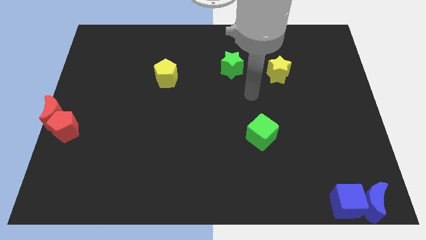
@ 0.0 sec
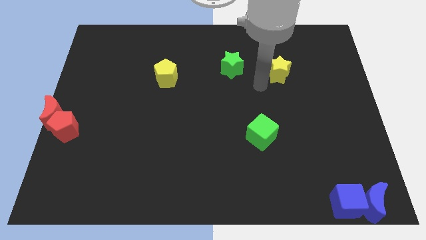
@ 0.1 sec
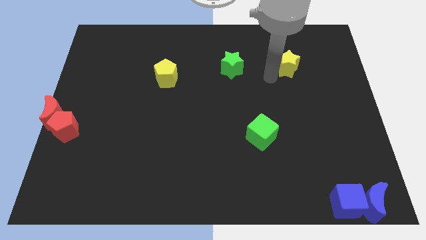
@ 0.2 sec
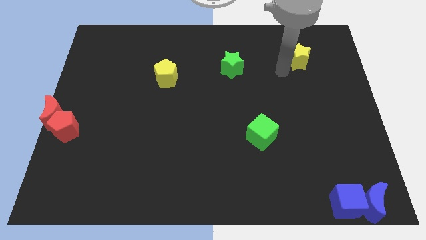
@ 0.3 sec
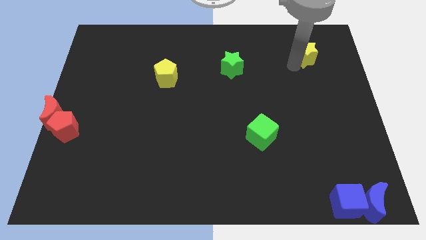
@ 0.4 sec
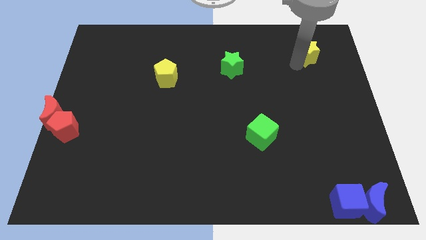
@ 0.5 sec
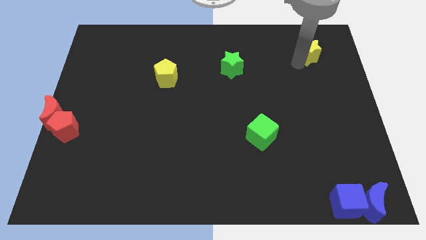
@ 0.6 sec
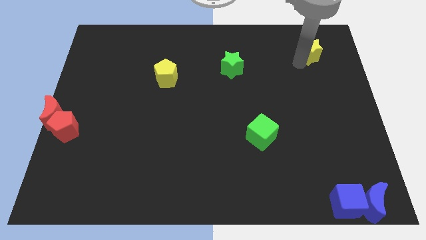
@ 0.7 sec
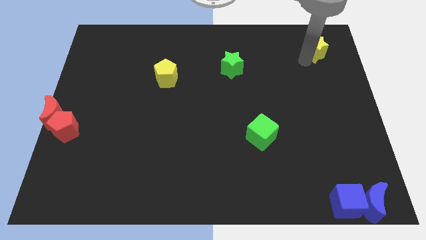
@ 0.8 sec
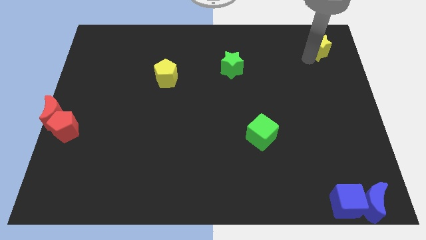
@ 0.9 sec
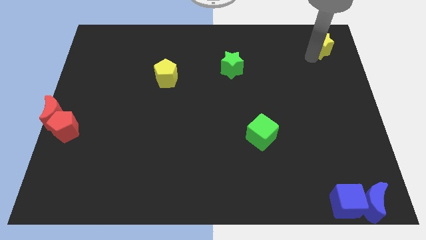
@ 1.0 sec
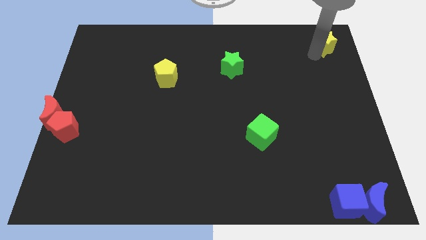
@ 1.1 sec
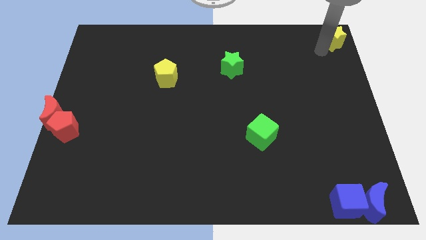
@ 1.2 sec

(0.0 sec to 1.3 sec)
push the yellow star to the top right corner

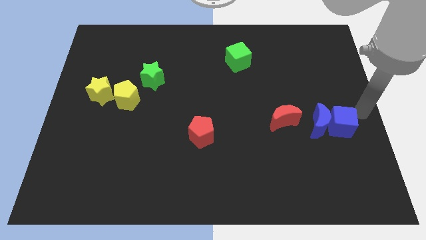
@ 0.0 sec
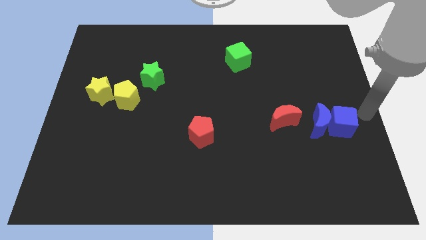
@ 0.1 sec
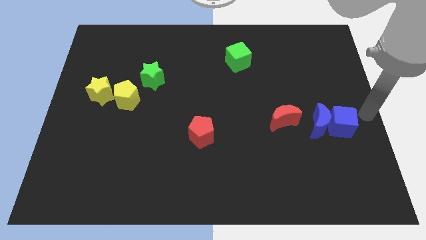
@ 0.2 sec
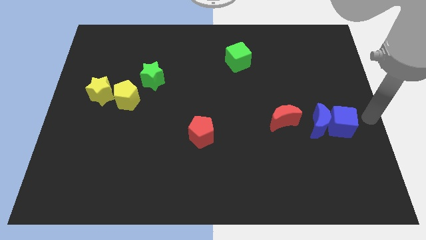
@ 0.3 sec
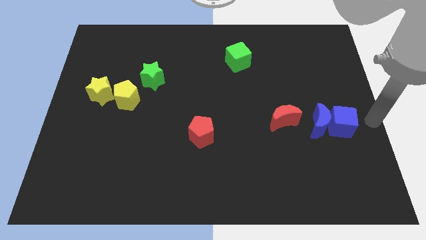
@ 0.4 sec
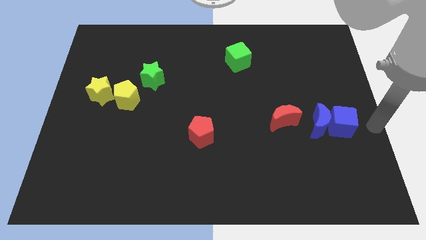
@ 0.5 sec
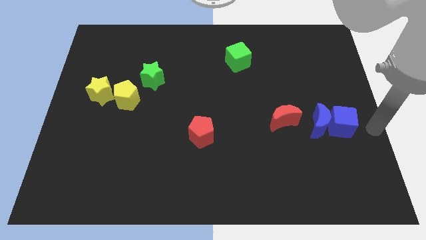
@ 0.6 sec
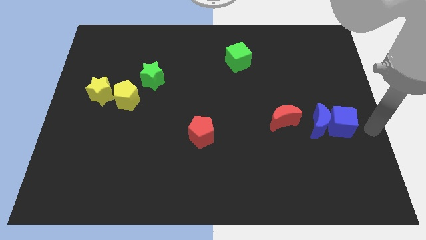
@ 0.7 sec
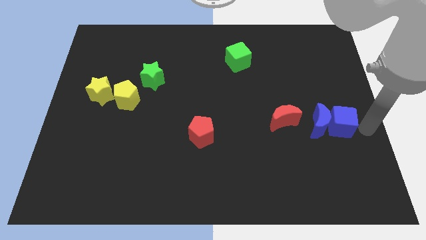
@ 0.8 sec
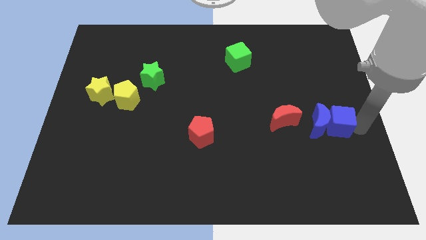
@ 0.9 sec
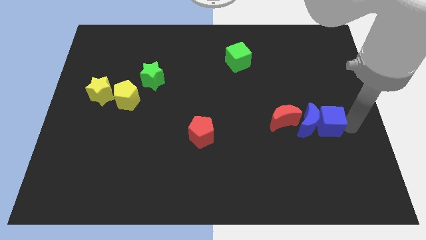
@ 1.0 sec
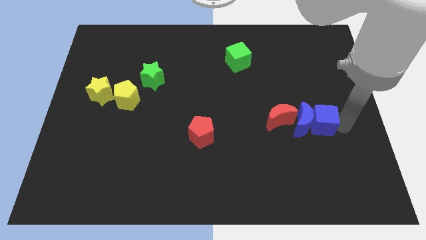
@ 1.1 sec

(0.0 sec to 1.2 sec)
push the blue blocks into the red crescent

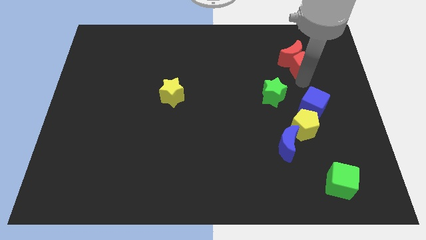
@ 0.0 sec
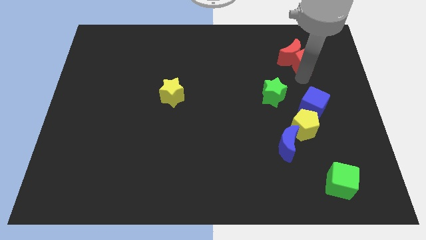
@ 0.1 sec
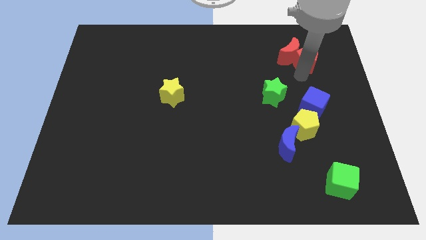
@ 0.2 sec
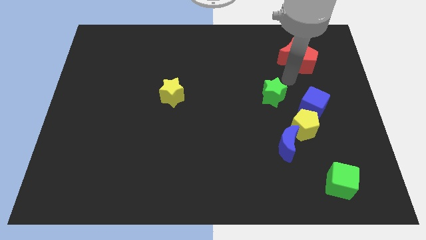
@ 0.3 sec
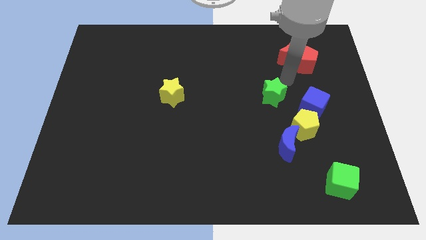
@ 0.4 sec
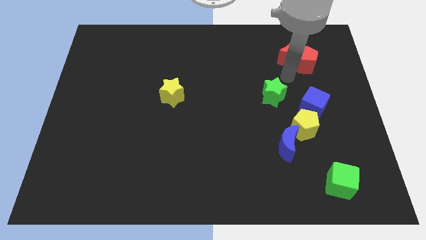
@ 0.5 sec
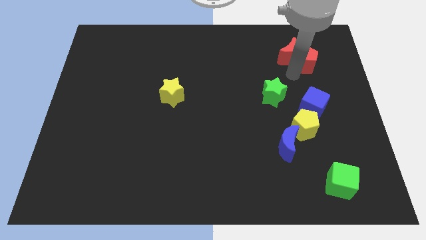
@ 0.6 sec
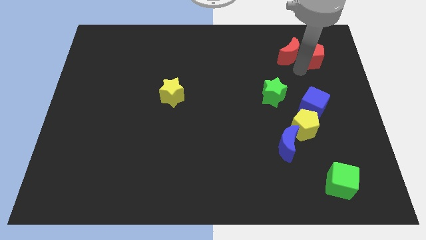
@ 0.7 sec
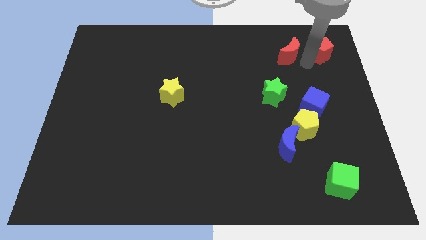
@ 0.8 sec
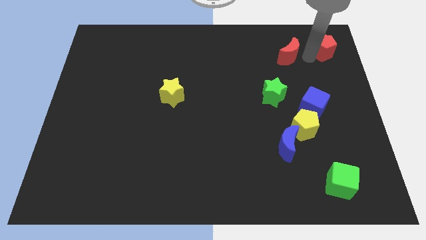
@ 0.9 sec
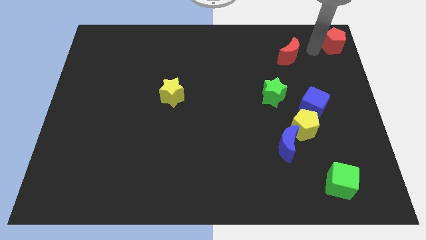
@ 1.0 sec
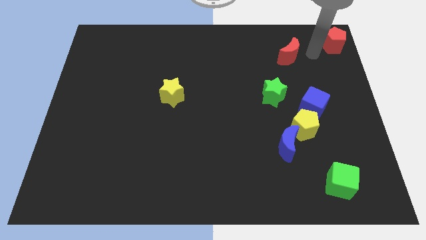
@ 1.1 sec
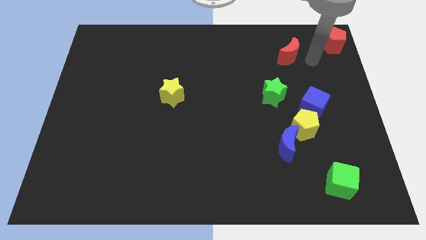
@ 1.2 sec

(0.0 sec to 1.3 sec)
move the red pentagon to the right top of the board

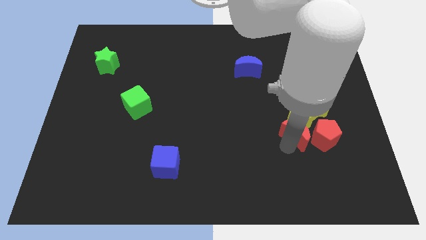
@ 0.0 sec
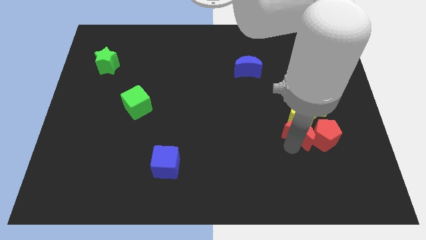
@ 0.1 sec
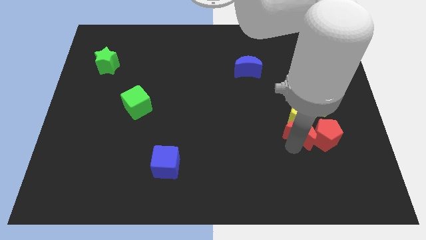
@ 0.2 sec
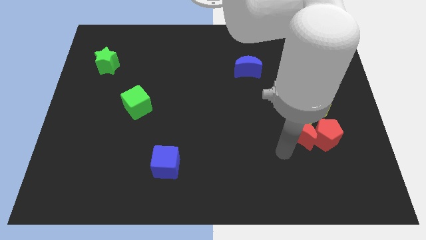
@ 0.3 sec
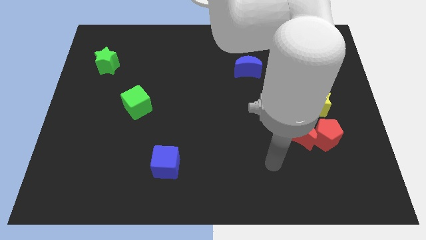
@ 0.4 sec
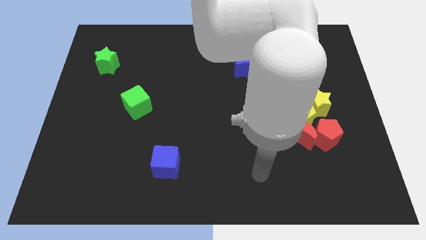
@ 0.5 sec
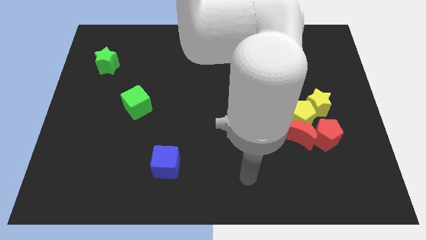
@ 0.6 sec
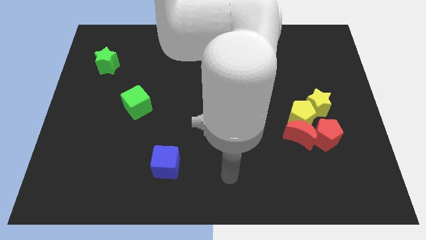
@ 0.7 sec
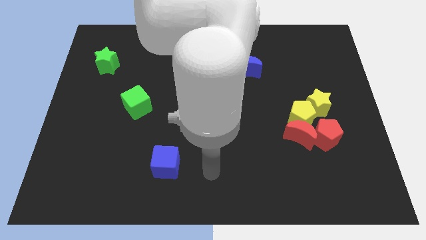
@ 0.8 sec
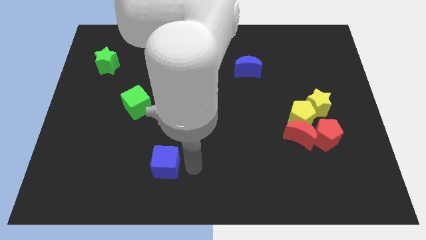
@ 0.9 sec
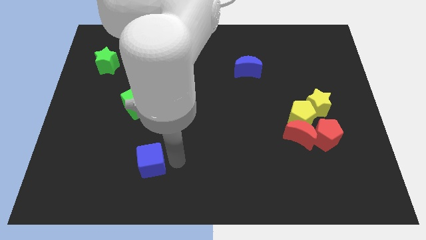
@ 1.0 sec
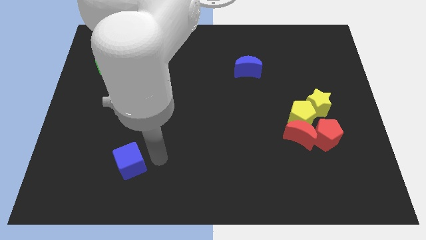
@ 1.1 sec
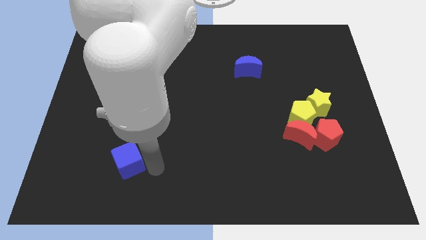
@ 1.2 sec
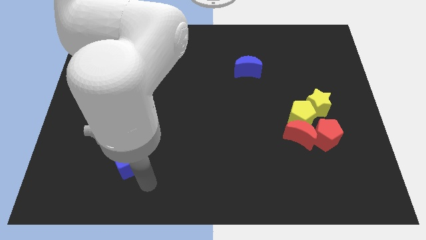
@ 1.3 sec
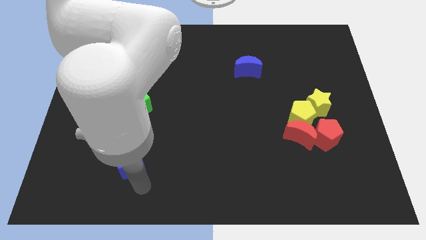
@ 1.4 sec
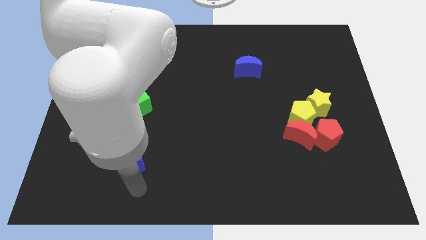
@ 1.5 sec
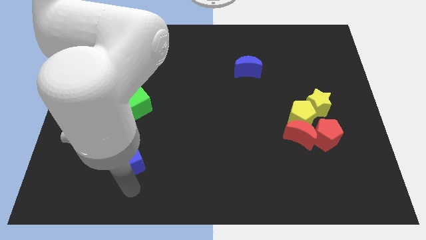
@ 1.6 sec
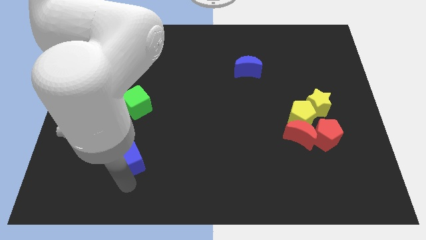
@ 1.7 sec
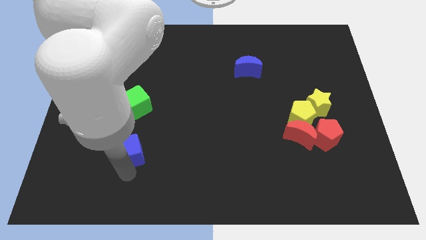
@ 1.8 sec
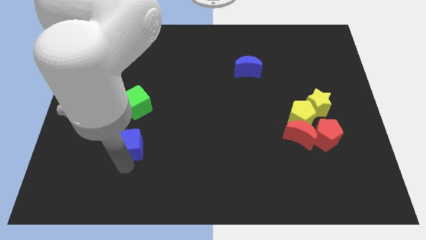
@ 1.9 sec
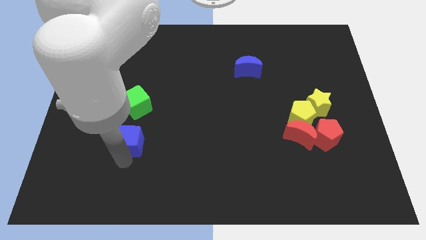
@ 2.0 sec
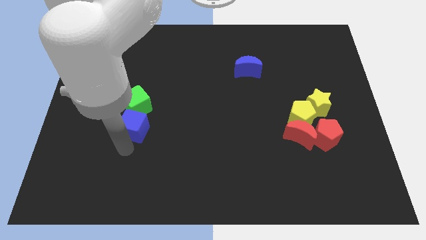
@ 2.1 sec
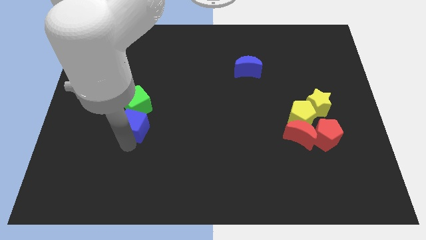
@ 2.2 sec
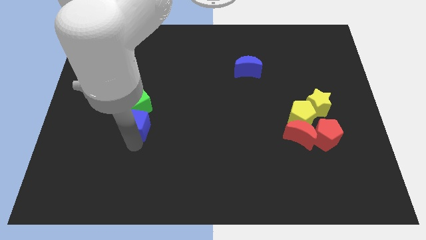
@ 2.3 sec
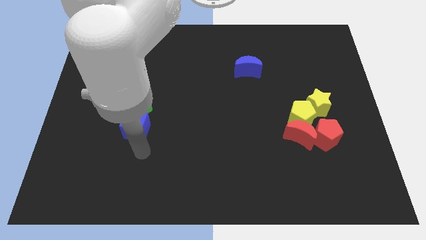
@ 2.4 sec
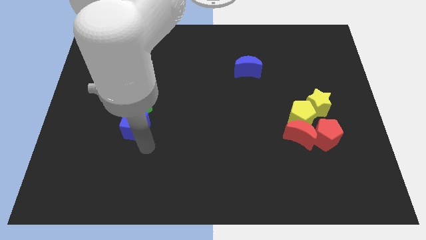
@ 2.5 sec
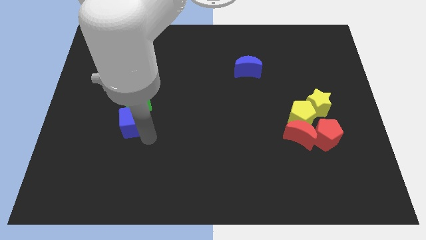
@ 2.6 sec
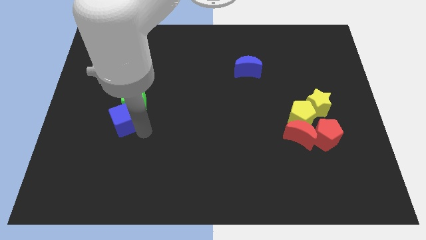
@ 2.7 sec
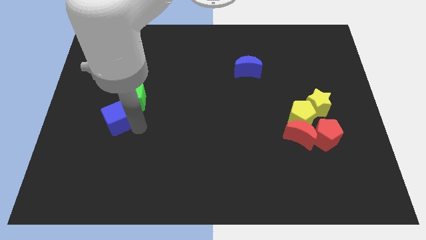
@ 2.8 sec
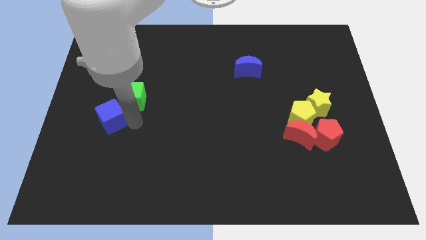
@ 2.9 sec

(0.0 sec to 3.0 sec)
take the blue cube into the bottom of the green cube

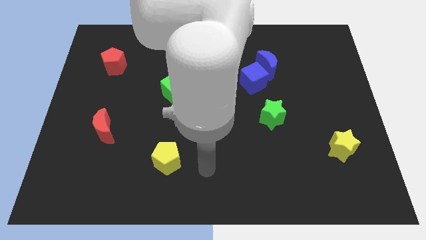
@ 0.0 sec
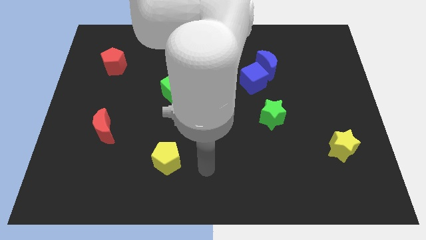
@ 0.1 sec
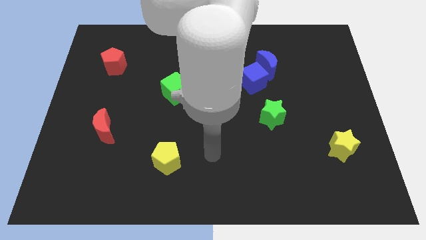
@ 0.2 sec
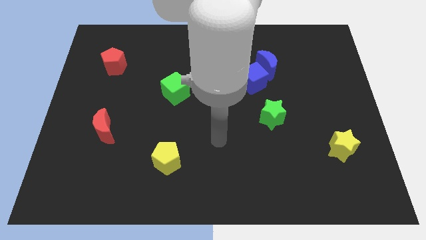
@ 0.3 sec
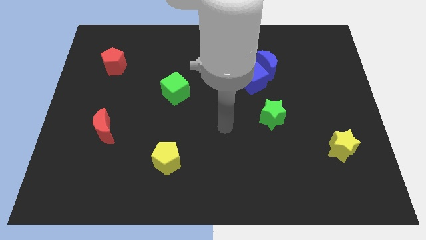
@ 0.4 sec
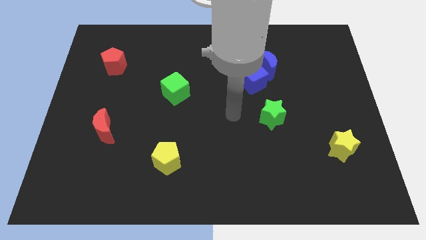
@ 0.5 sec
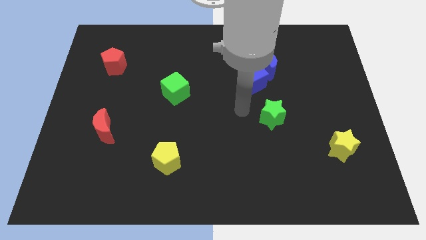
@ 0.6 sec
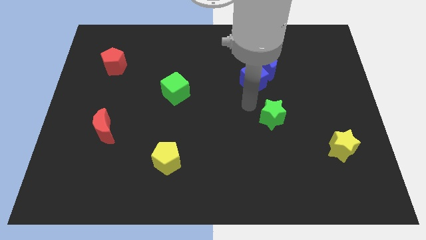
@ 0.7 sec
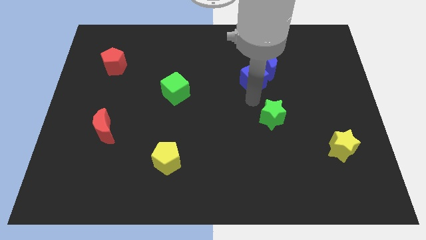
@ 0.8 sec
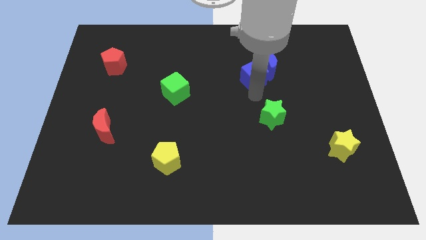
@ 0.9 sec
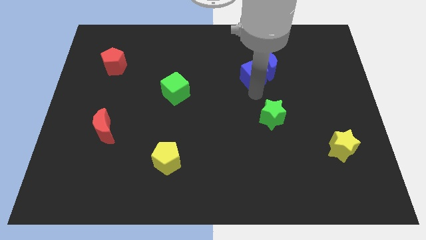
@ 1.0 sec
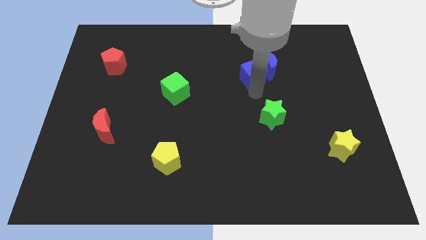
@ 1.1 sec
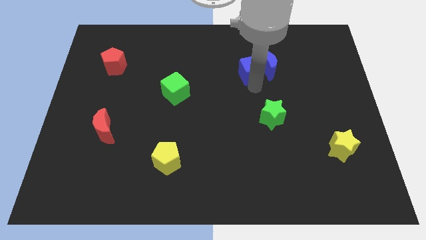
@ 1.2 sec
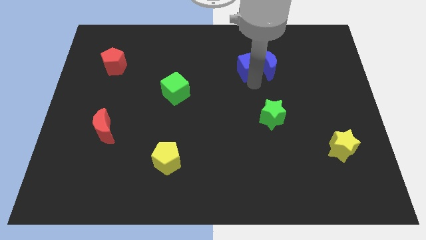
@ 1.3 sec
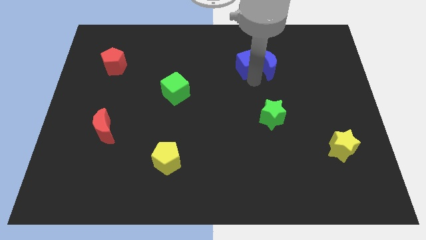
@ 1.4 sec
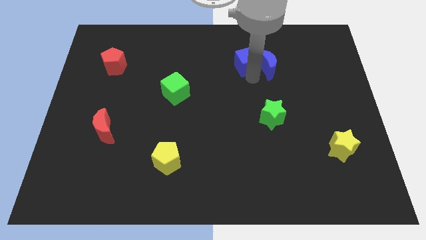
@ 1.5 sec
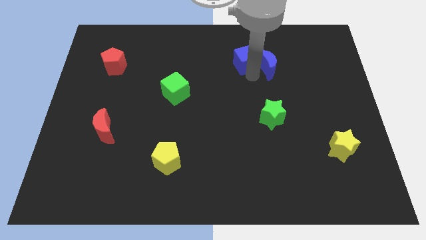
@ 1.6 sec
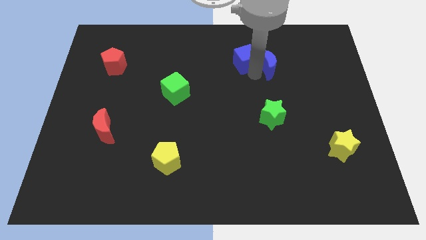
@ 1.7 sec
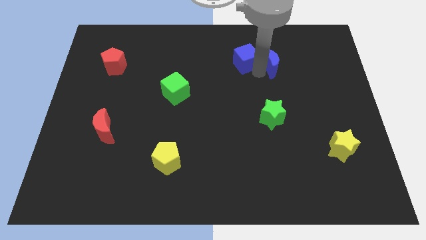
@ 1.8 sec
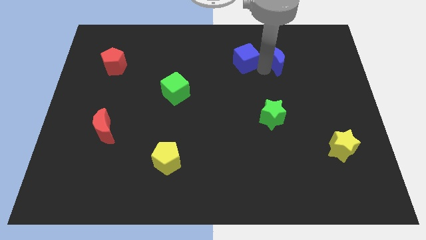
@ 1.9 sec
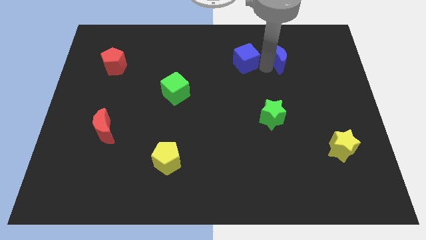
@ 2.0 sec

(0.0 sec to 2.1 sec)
separate the blue cube and blue moon
